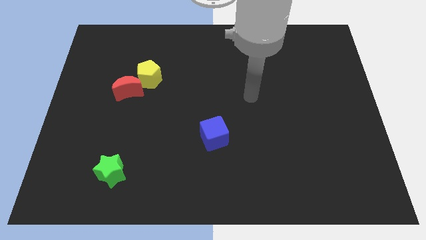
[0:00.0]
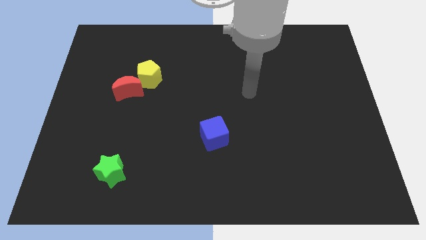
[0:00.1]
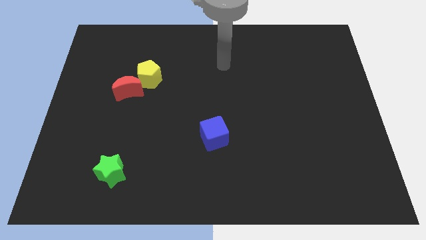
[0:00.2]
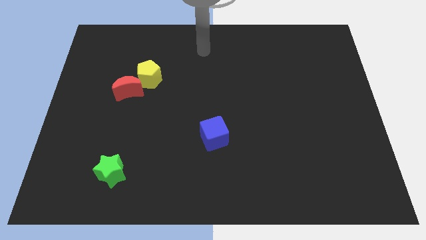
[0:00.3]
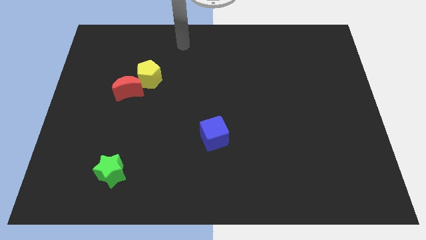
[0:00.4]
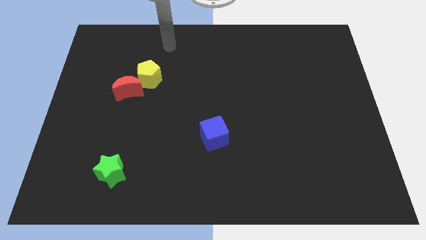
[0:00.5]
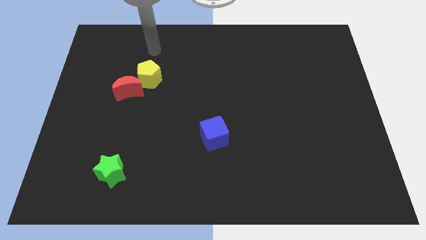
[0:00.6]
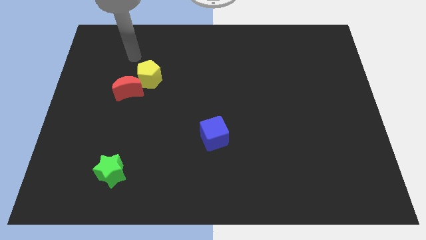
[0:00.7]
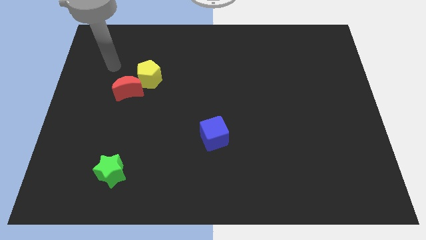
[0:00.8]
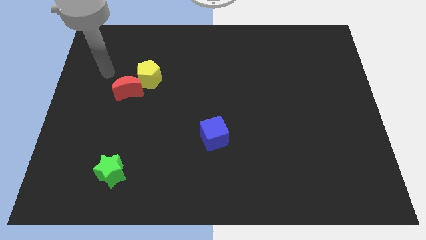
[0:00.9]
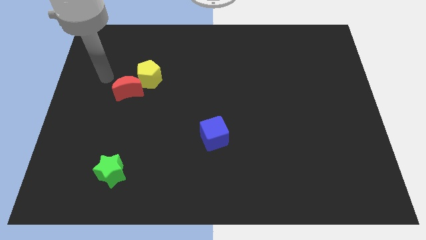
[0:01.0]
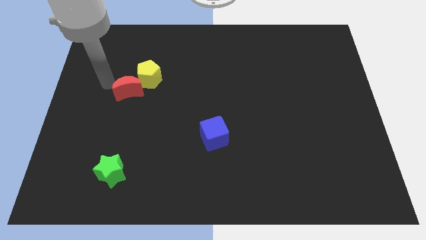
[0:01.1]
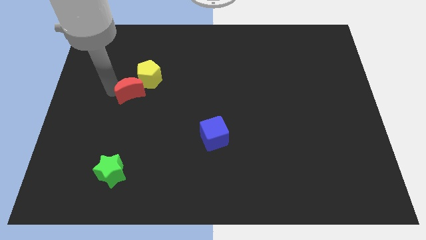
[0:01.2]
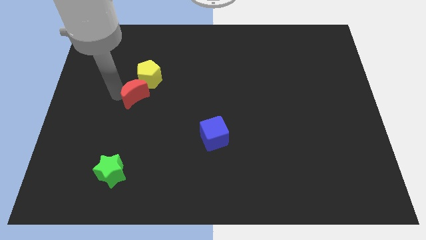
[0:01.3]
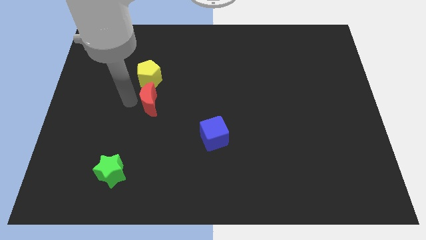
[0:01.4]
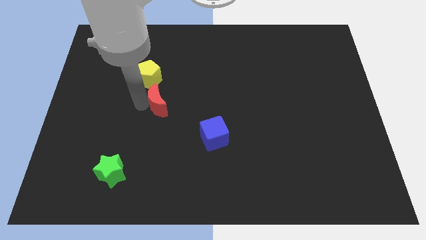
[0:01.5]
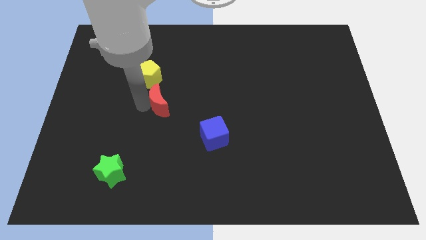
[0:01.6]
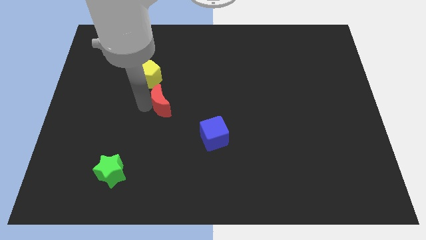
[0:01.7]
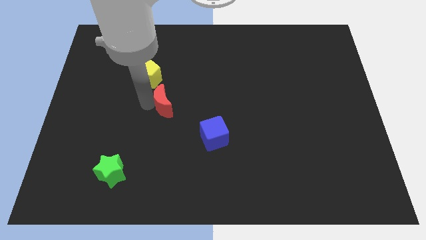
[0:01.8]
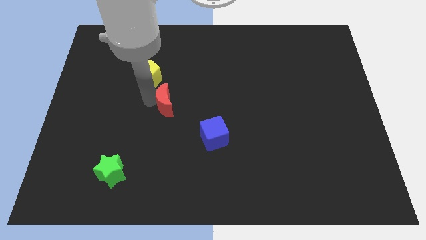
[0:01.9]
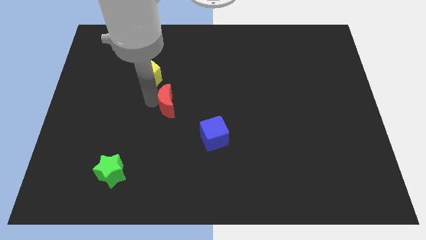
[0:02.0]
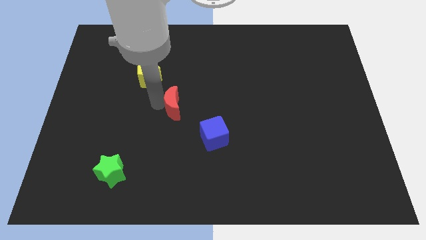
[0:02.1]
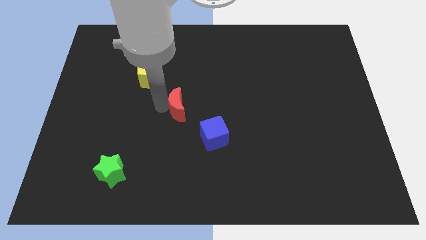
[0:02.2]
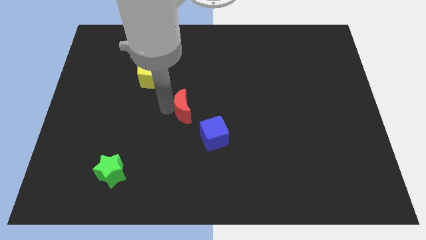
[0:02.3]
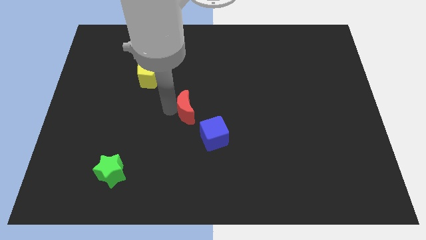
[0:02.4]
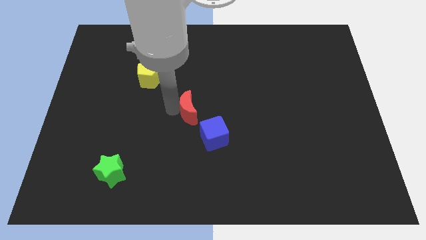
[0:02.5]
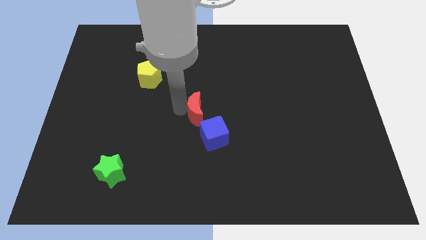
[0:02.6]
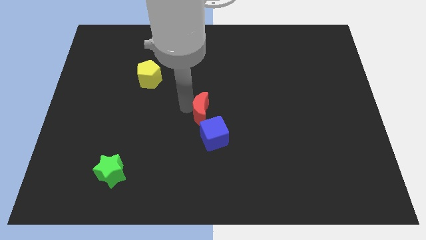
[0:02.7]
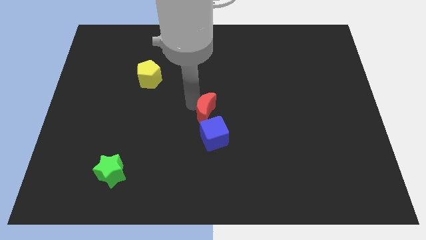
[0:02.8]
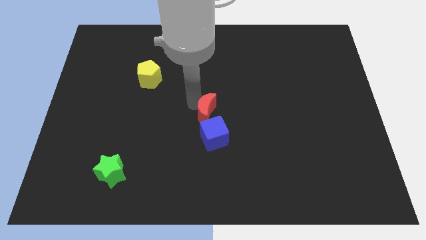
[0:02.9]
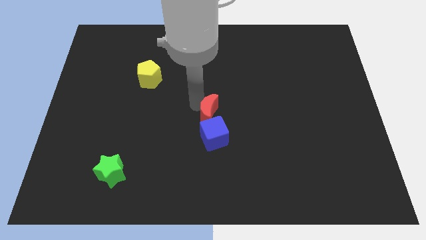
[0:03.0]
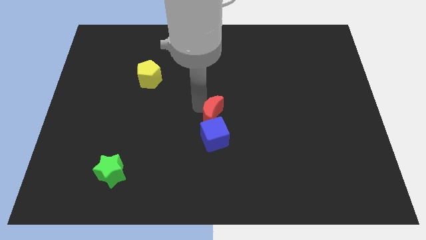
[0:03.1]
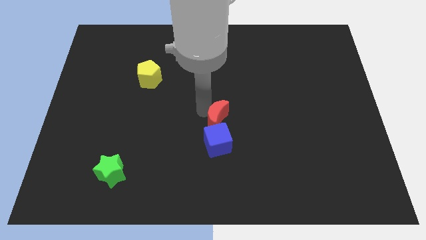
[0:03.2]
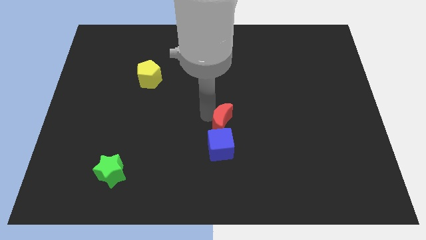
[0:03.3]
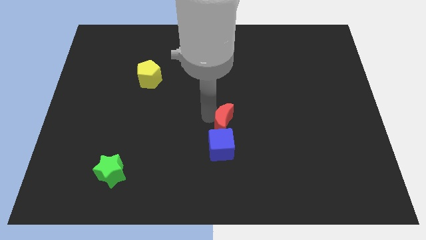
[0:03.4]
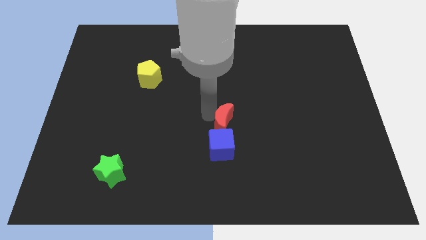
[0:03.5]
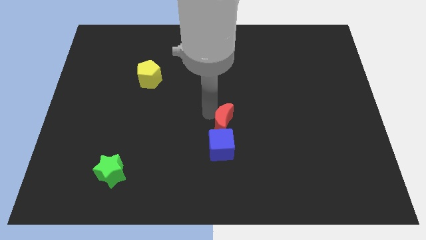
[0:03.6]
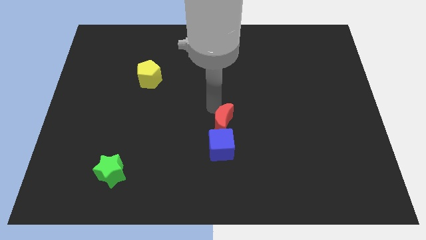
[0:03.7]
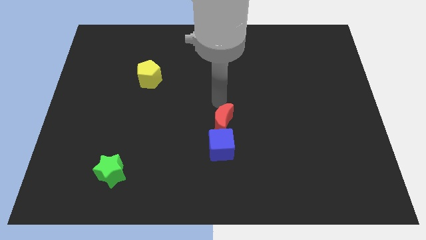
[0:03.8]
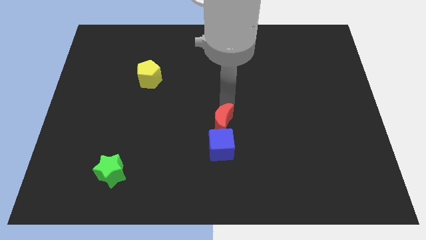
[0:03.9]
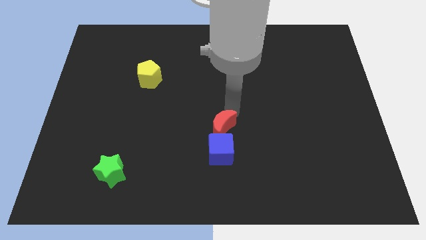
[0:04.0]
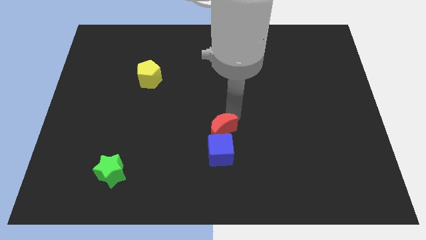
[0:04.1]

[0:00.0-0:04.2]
slide the red moon close to the blue block

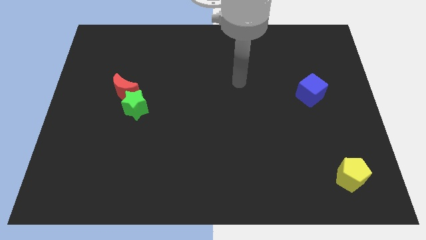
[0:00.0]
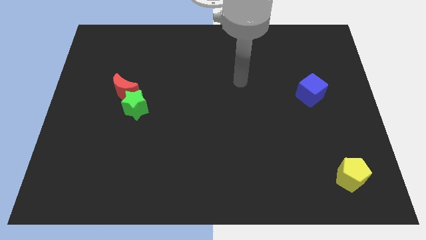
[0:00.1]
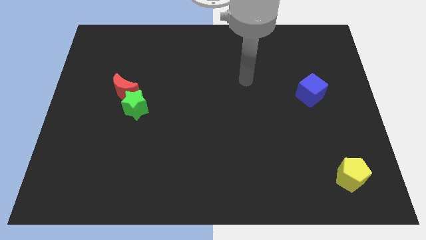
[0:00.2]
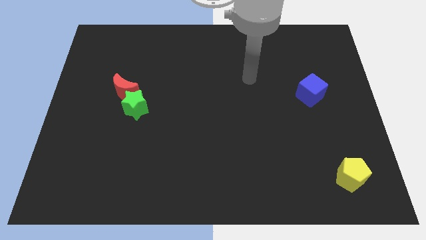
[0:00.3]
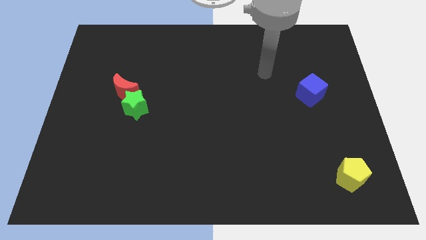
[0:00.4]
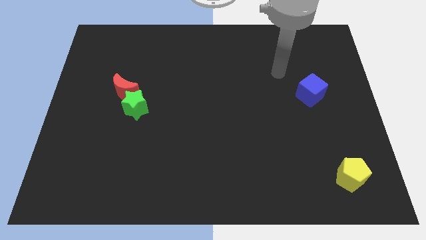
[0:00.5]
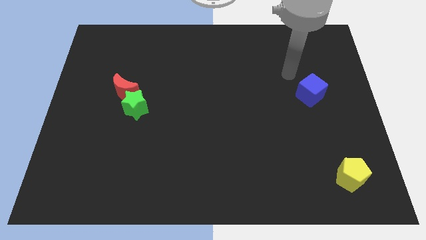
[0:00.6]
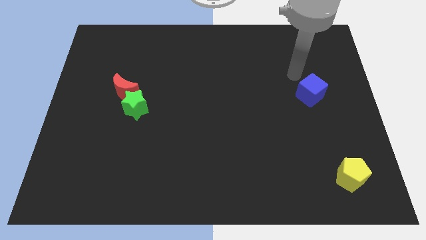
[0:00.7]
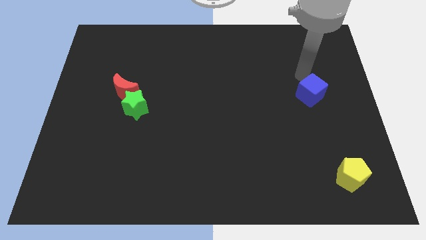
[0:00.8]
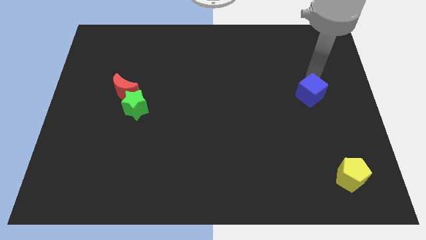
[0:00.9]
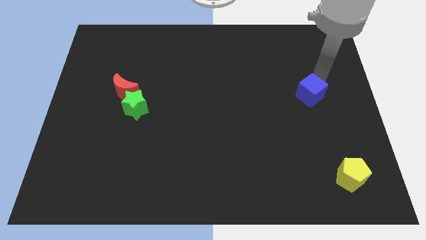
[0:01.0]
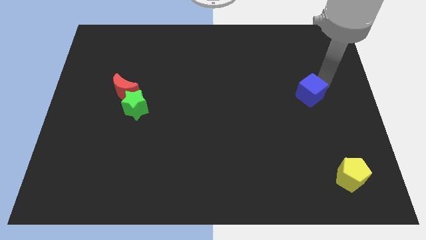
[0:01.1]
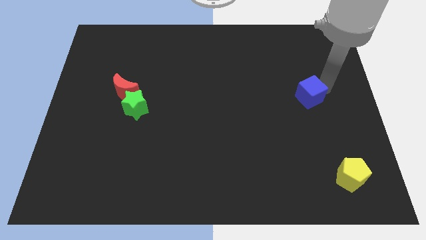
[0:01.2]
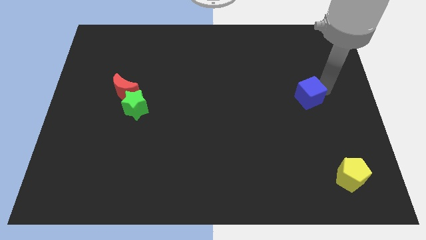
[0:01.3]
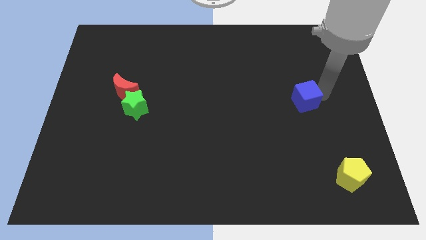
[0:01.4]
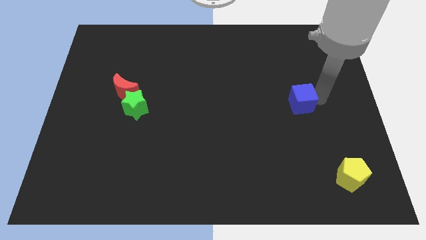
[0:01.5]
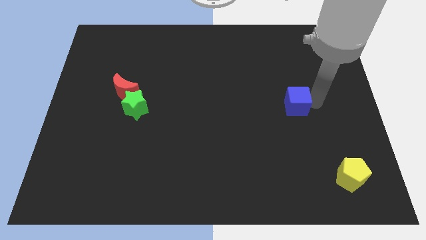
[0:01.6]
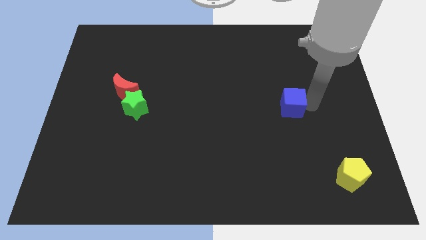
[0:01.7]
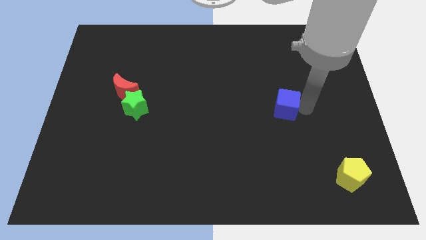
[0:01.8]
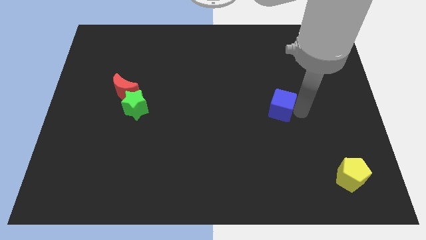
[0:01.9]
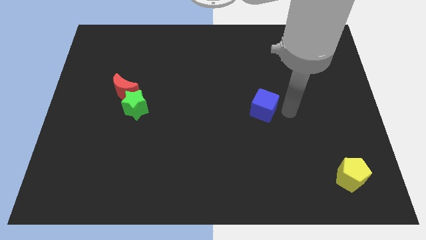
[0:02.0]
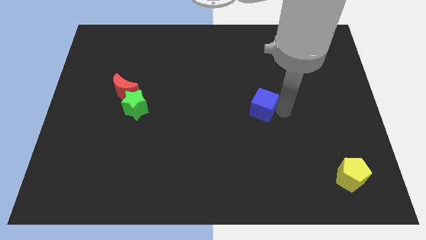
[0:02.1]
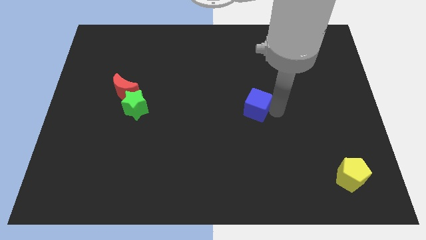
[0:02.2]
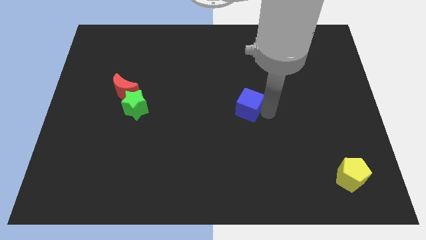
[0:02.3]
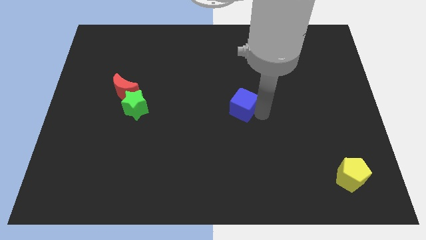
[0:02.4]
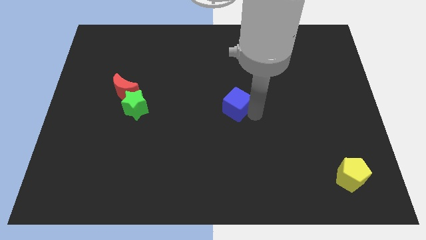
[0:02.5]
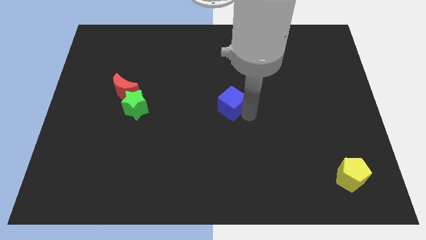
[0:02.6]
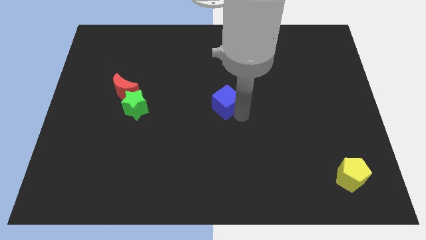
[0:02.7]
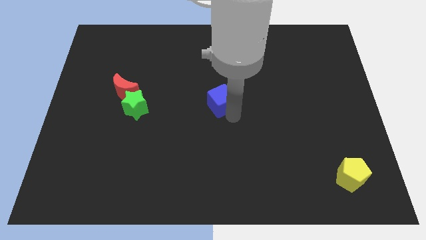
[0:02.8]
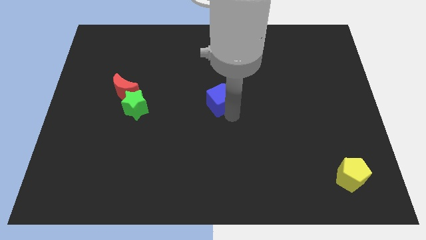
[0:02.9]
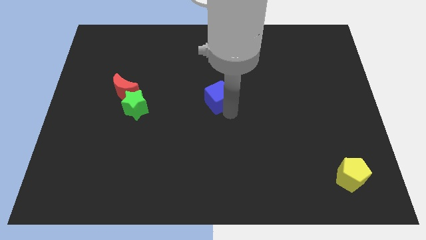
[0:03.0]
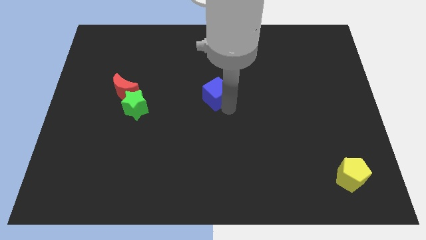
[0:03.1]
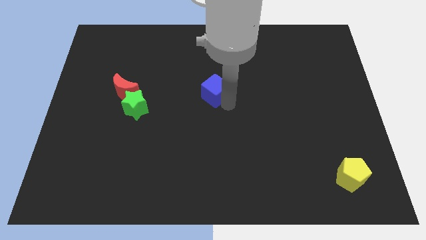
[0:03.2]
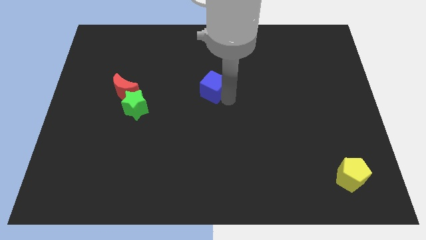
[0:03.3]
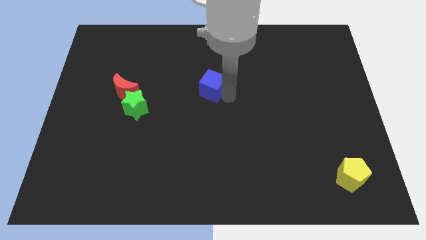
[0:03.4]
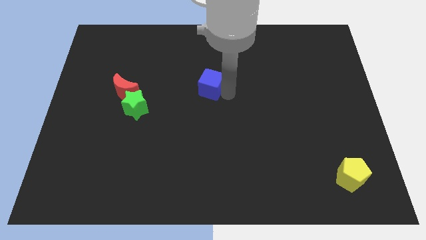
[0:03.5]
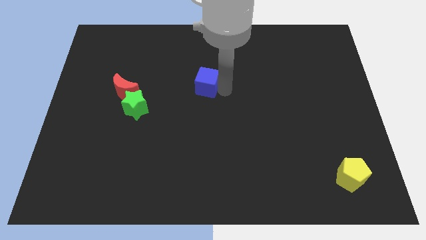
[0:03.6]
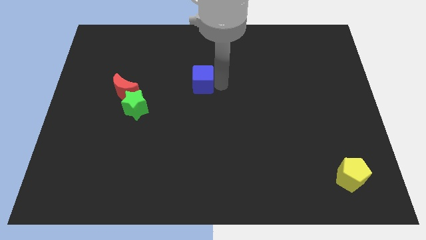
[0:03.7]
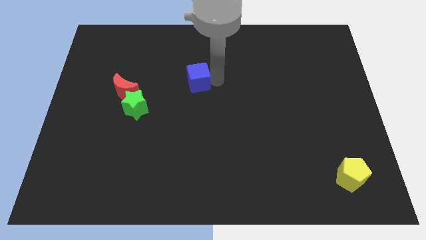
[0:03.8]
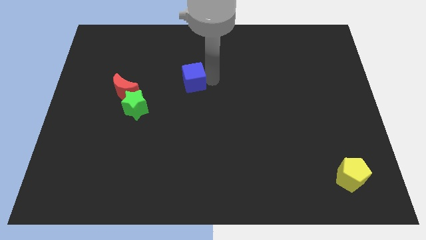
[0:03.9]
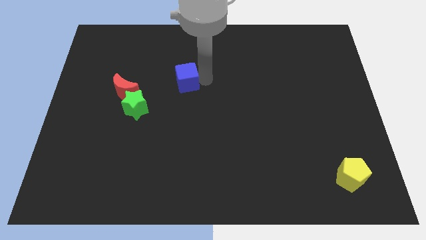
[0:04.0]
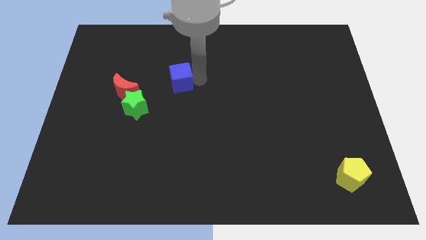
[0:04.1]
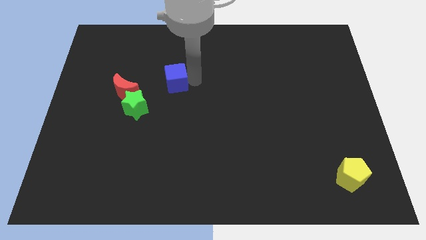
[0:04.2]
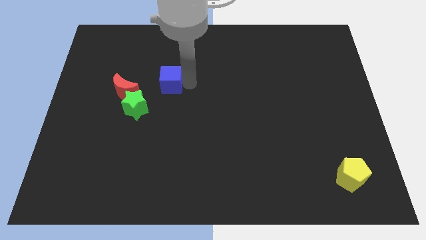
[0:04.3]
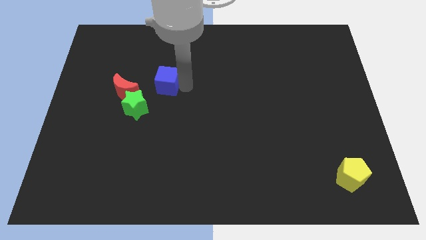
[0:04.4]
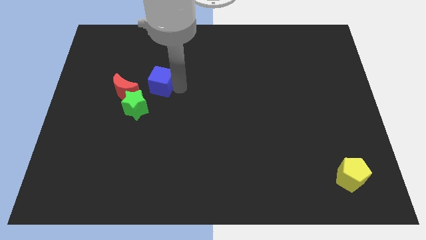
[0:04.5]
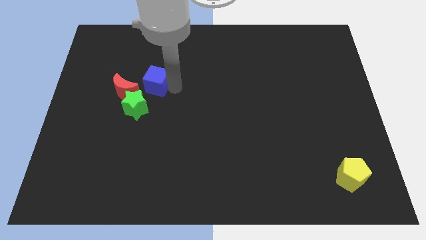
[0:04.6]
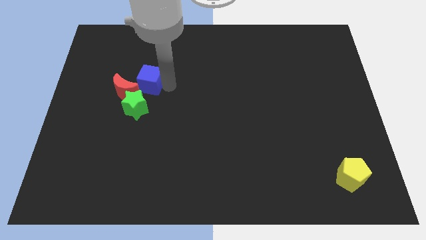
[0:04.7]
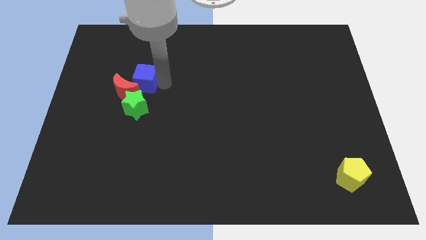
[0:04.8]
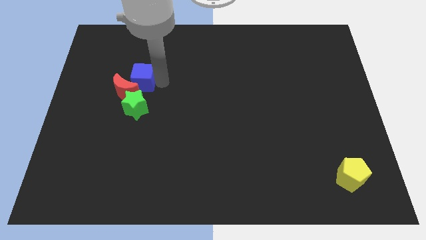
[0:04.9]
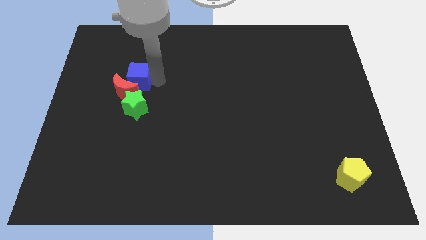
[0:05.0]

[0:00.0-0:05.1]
put the blue block close to the moon
